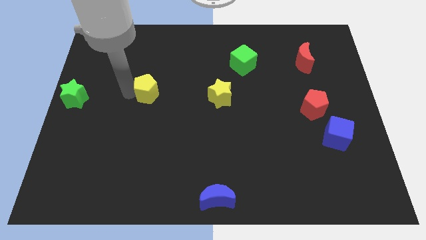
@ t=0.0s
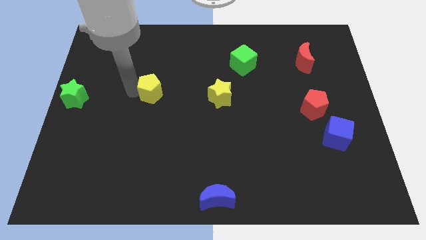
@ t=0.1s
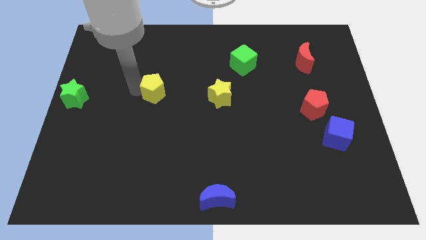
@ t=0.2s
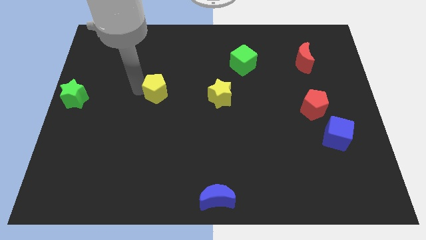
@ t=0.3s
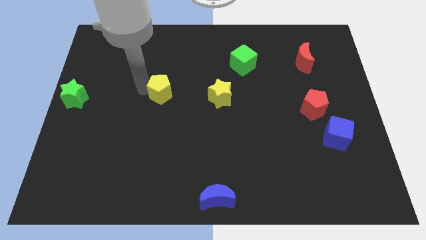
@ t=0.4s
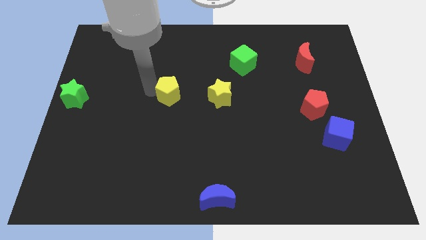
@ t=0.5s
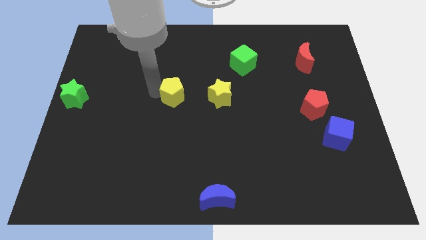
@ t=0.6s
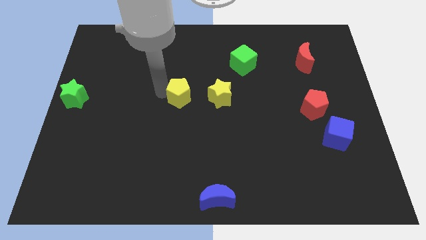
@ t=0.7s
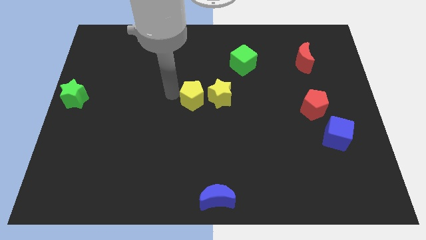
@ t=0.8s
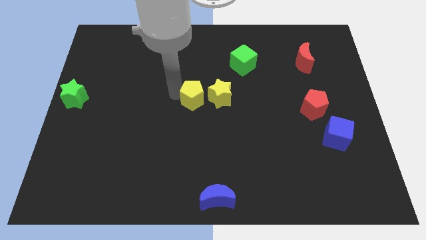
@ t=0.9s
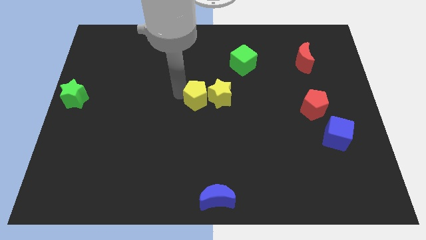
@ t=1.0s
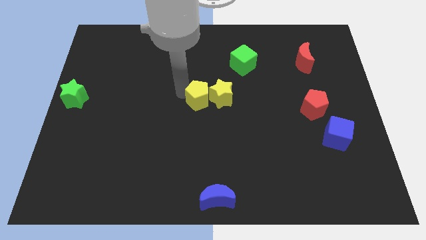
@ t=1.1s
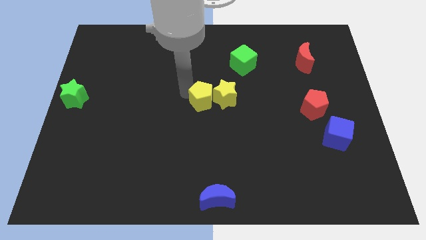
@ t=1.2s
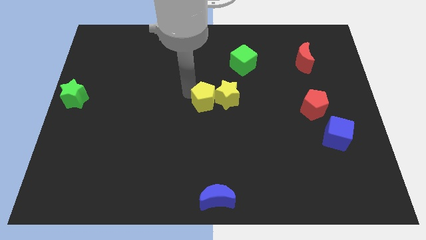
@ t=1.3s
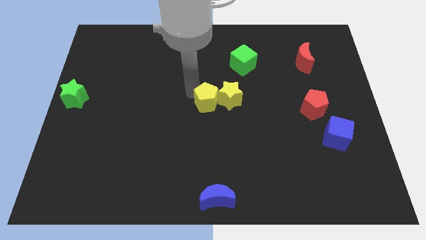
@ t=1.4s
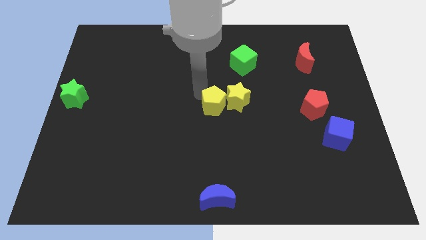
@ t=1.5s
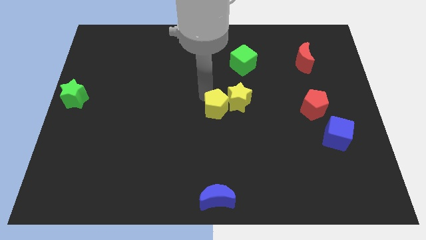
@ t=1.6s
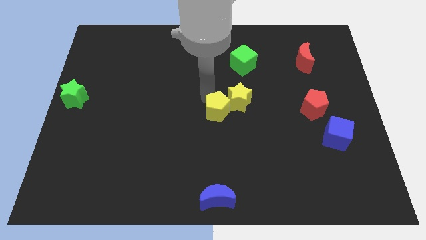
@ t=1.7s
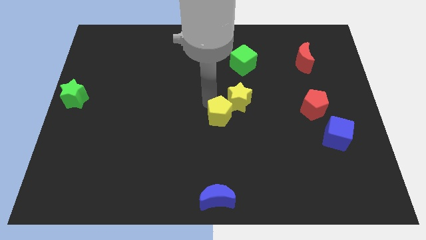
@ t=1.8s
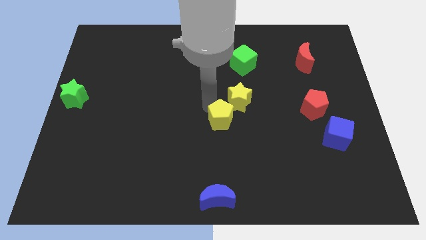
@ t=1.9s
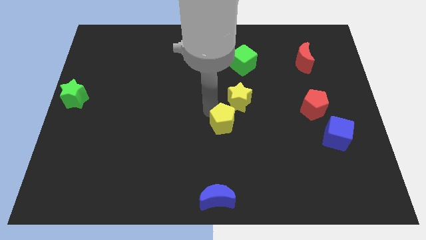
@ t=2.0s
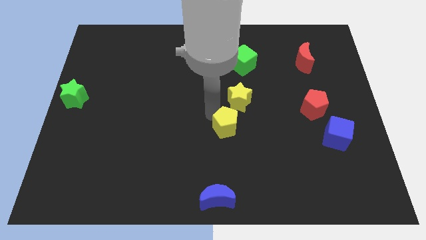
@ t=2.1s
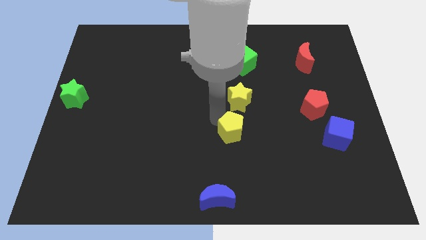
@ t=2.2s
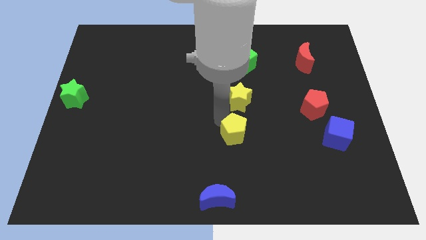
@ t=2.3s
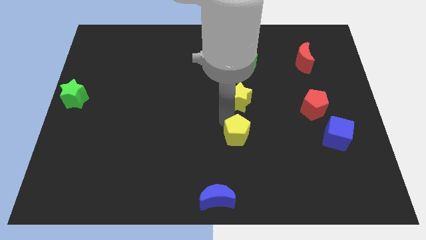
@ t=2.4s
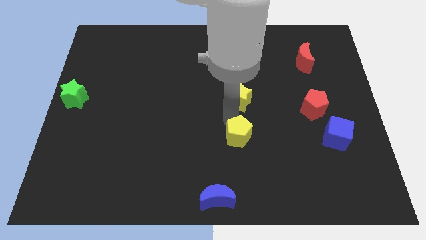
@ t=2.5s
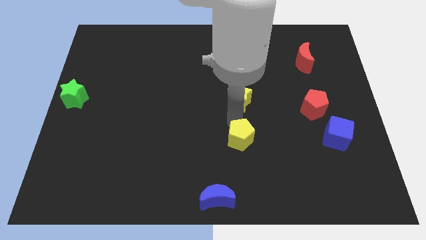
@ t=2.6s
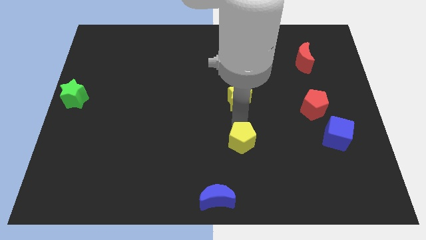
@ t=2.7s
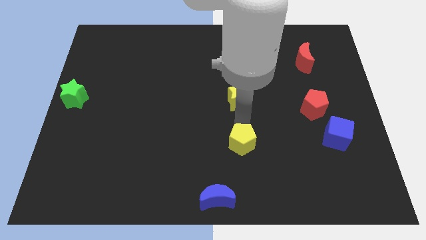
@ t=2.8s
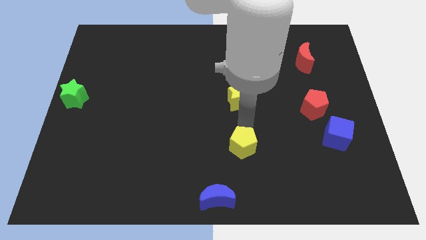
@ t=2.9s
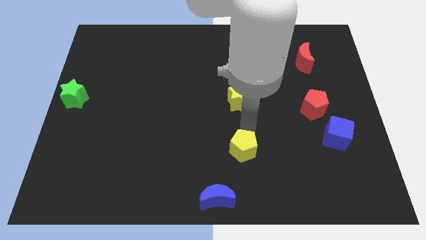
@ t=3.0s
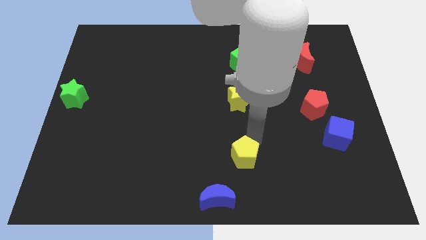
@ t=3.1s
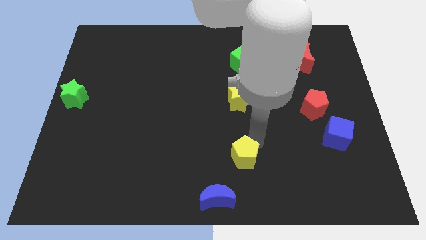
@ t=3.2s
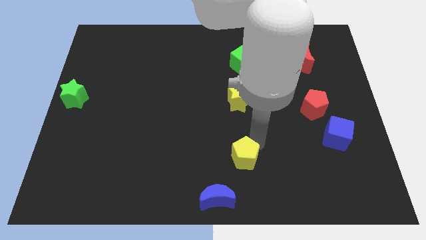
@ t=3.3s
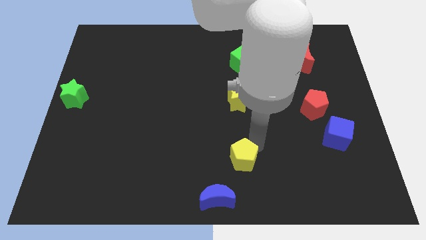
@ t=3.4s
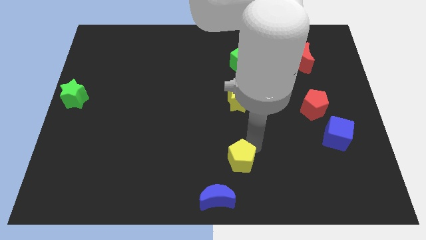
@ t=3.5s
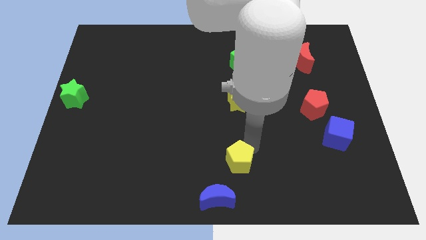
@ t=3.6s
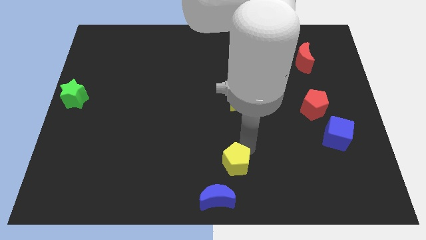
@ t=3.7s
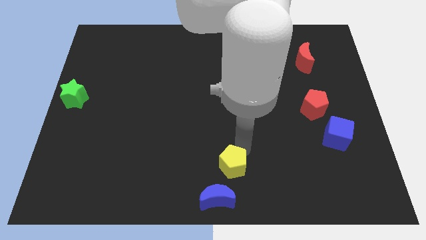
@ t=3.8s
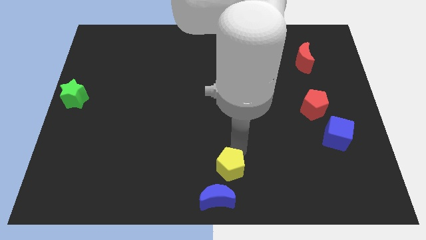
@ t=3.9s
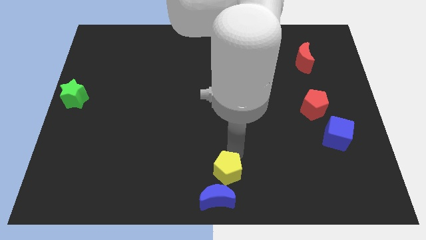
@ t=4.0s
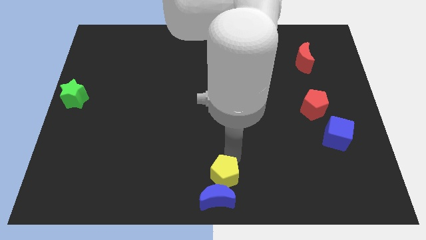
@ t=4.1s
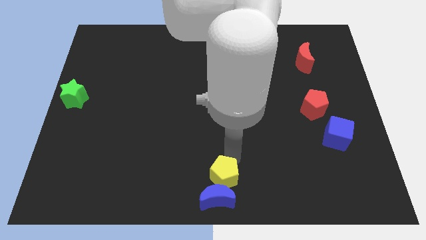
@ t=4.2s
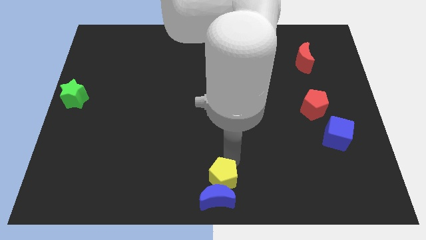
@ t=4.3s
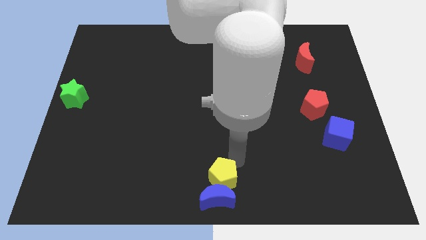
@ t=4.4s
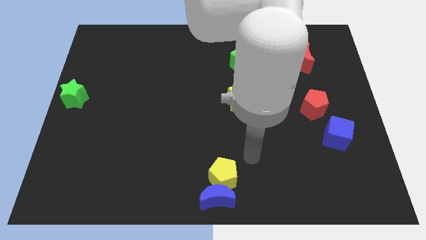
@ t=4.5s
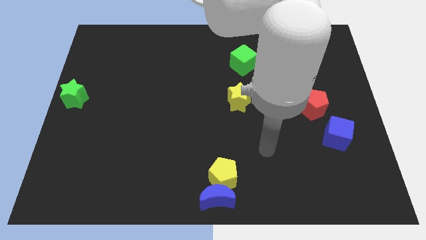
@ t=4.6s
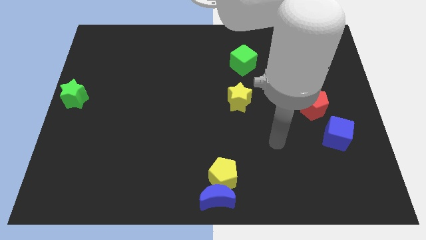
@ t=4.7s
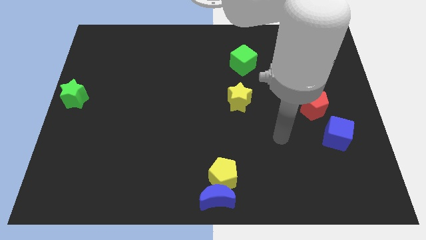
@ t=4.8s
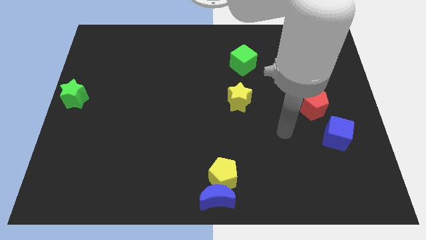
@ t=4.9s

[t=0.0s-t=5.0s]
place the yellow pentagon above the blue moon

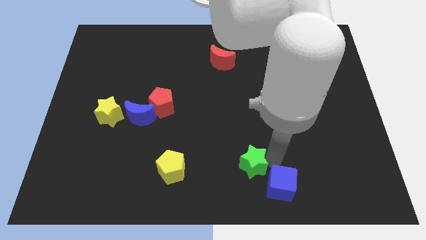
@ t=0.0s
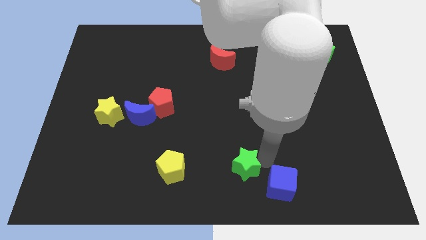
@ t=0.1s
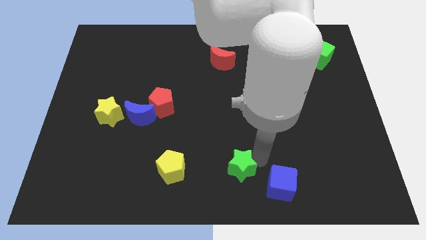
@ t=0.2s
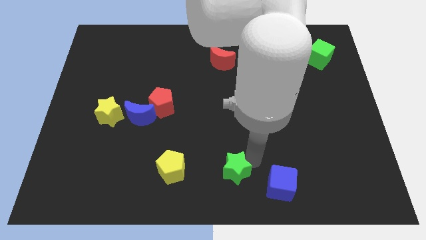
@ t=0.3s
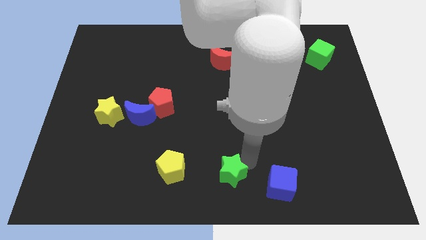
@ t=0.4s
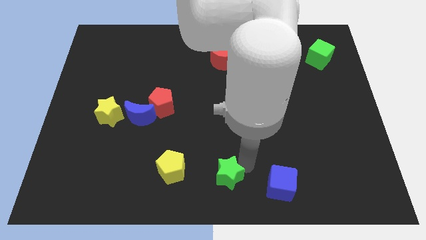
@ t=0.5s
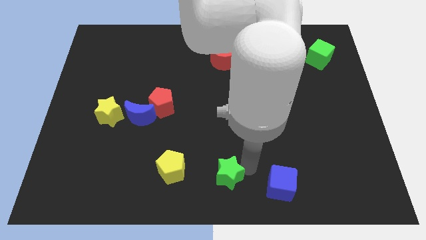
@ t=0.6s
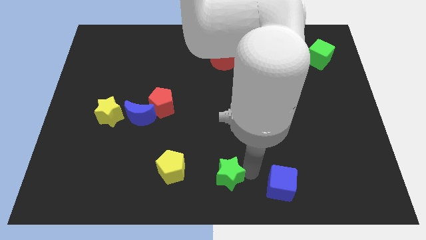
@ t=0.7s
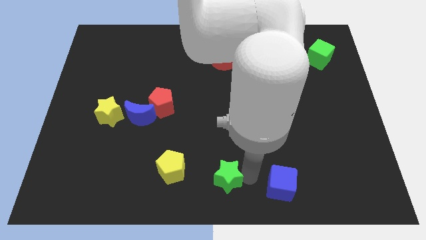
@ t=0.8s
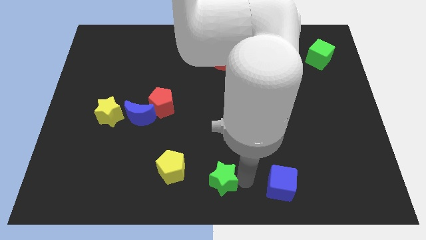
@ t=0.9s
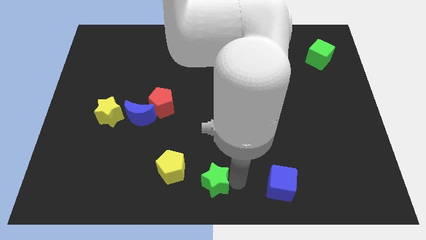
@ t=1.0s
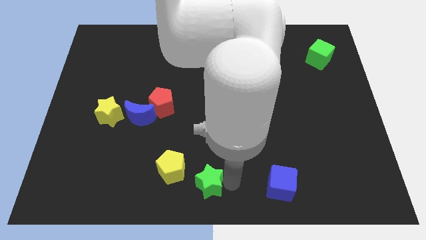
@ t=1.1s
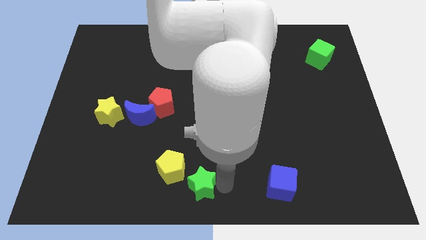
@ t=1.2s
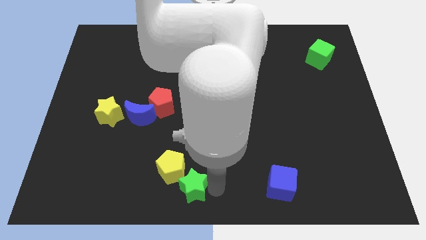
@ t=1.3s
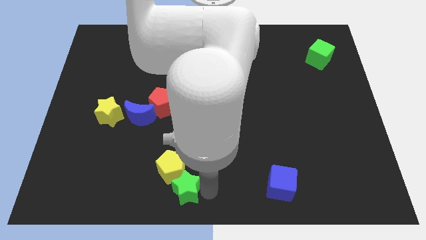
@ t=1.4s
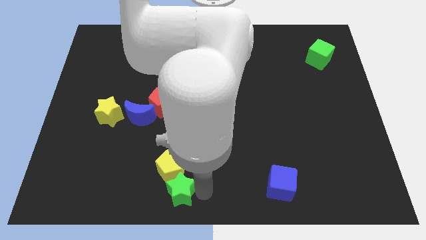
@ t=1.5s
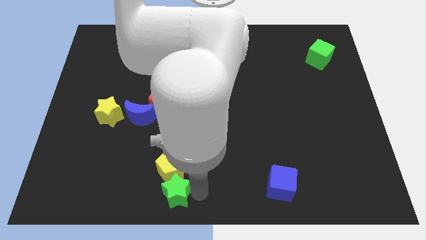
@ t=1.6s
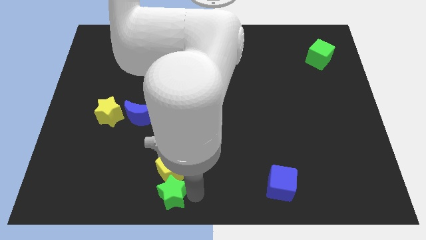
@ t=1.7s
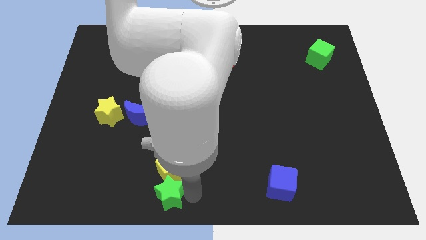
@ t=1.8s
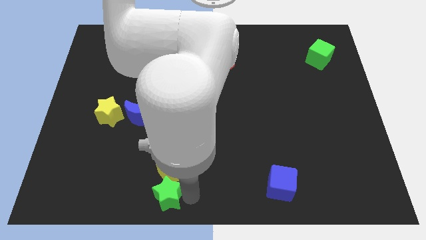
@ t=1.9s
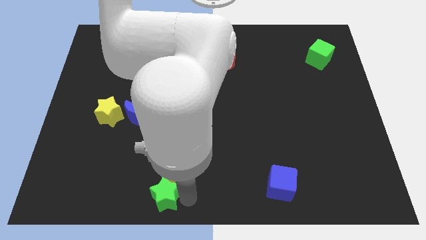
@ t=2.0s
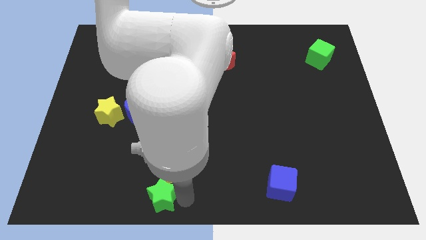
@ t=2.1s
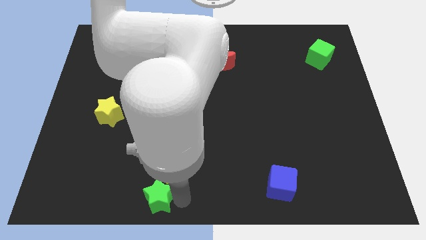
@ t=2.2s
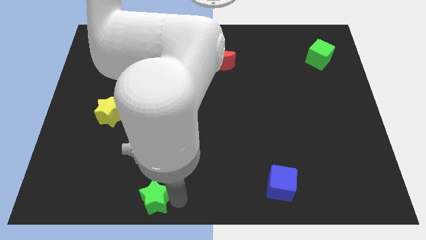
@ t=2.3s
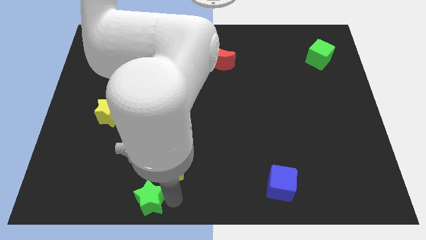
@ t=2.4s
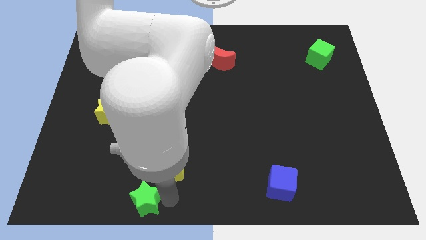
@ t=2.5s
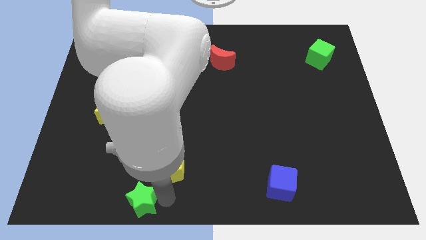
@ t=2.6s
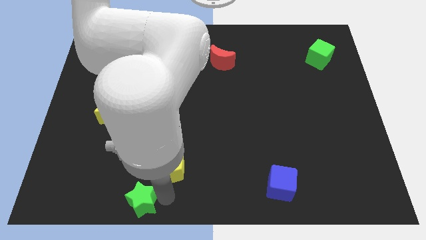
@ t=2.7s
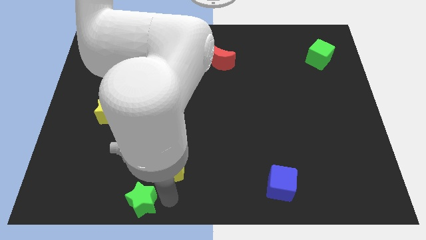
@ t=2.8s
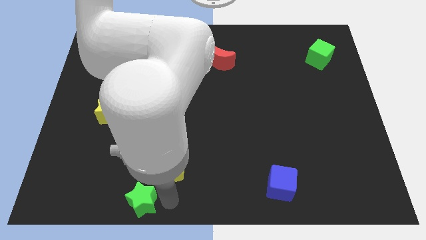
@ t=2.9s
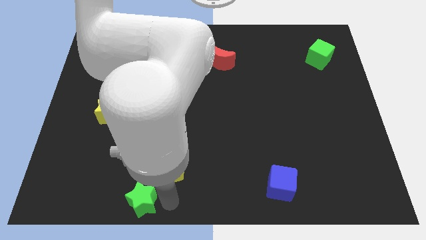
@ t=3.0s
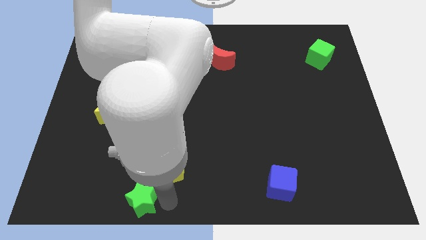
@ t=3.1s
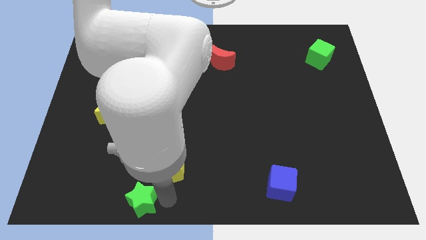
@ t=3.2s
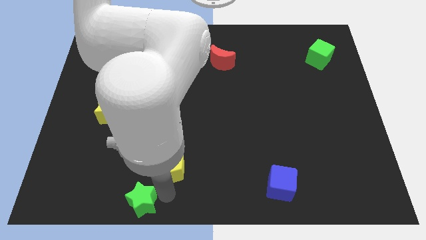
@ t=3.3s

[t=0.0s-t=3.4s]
push the green star to the bottom left of the yellow pentagon

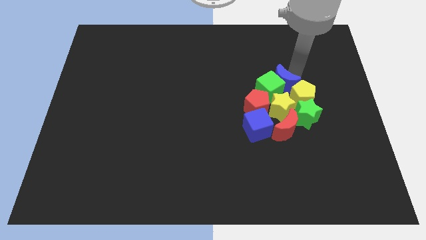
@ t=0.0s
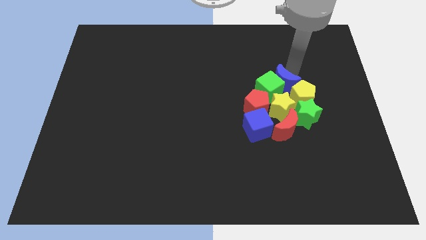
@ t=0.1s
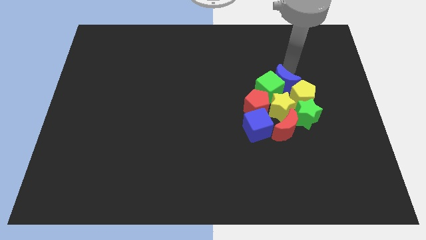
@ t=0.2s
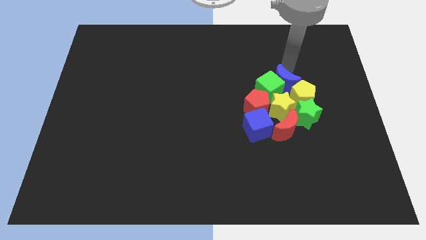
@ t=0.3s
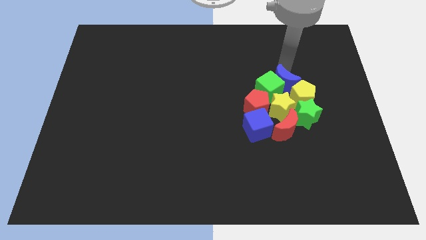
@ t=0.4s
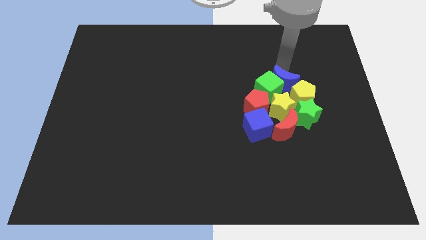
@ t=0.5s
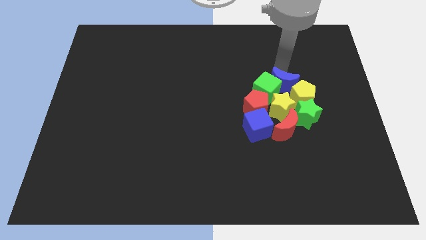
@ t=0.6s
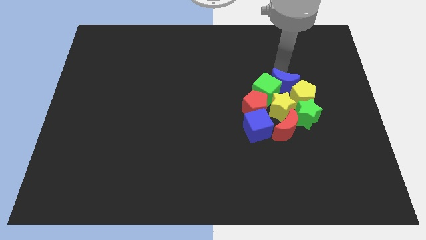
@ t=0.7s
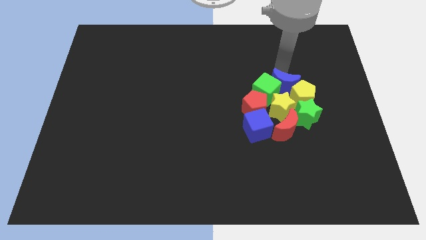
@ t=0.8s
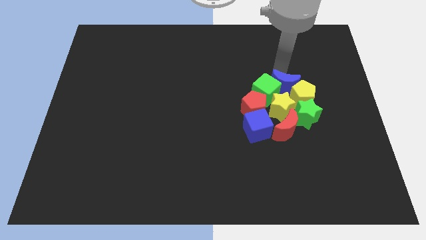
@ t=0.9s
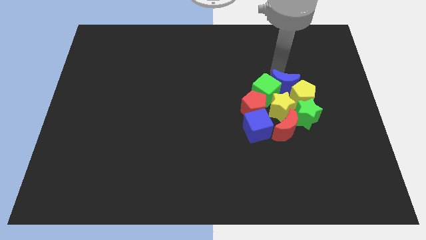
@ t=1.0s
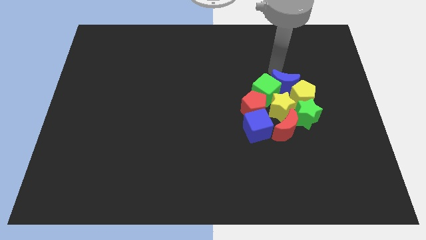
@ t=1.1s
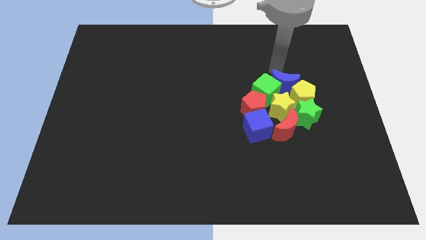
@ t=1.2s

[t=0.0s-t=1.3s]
push the blue moon into group of all the blocks
